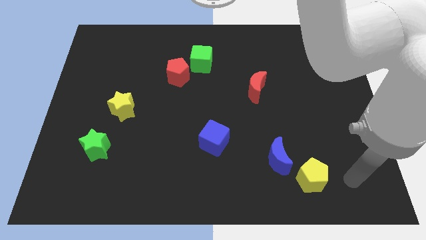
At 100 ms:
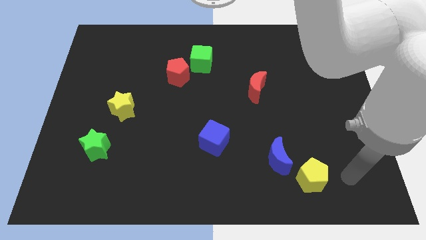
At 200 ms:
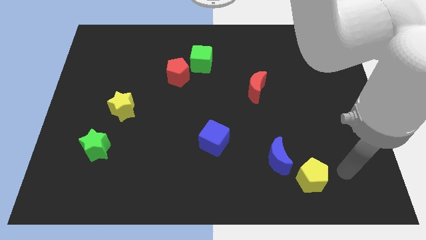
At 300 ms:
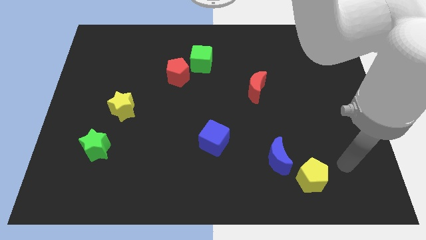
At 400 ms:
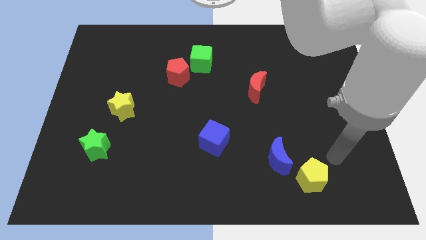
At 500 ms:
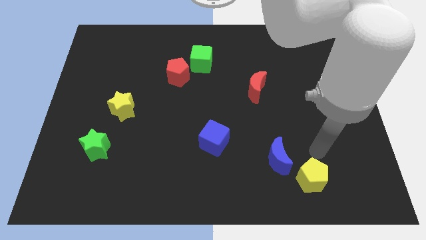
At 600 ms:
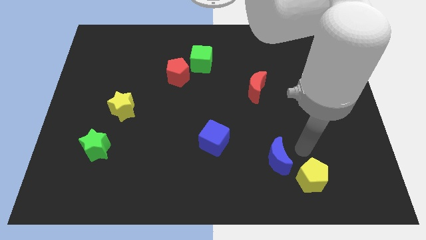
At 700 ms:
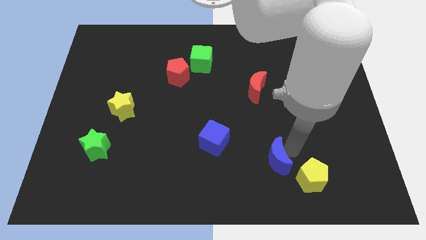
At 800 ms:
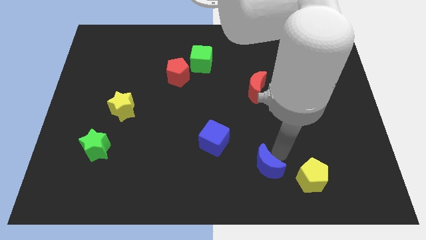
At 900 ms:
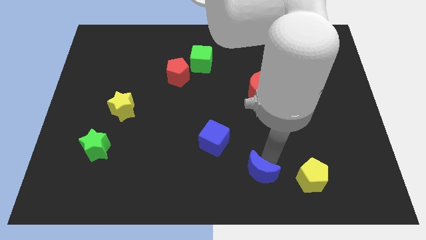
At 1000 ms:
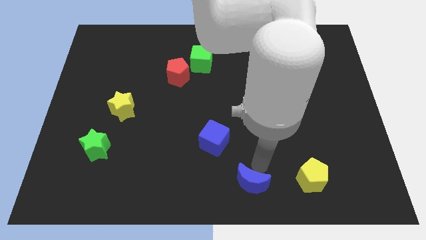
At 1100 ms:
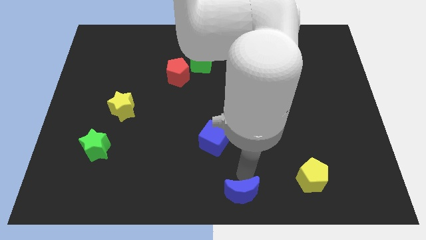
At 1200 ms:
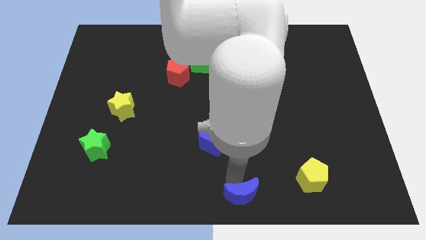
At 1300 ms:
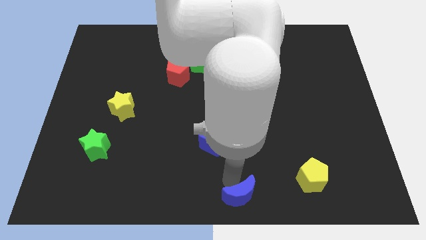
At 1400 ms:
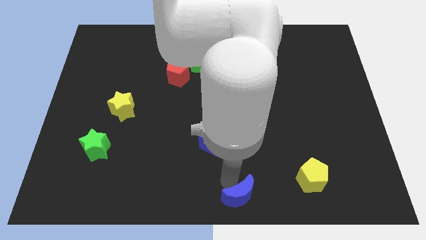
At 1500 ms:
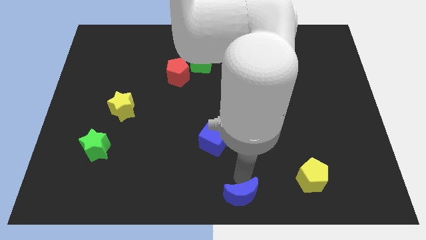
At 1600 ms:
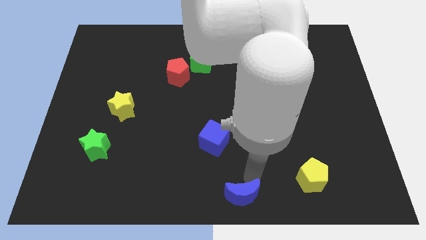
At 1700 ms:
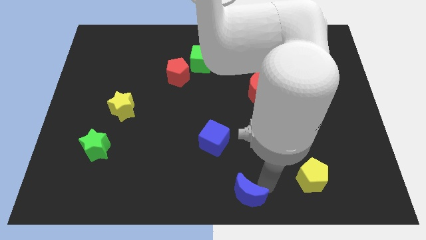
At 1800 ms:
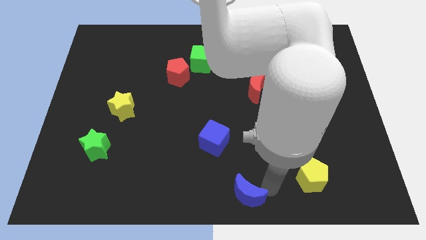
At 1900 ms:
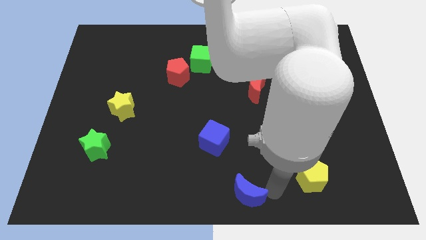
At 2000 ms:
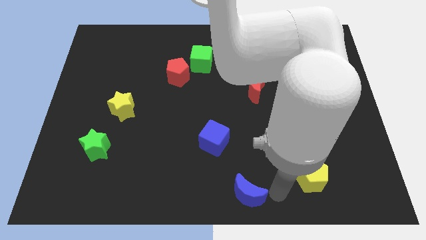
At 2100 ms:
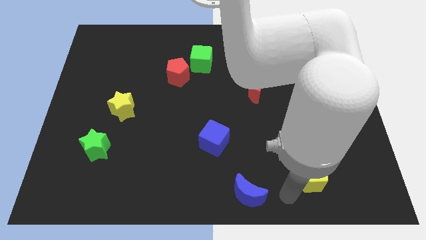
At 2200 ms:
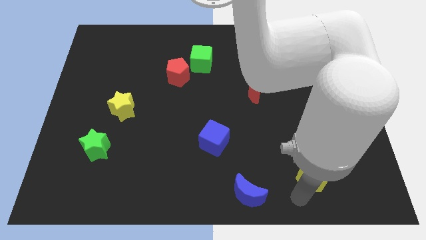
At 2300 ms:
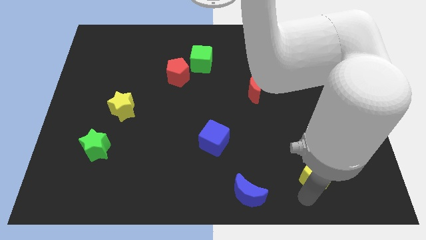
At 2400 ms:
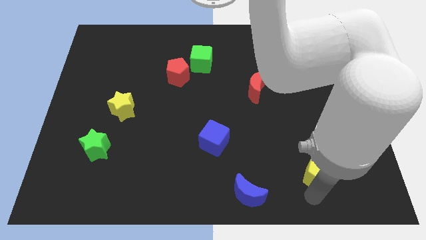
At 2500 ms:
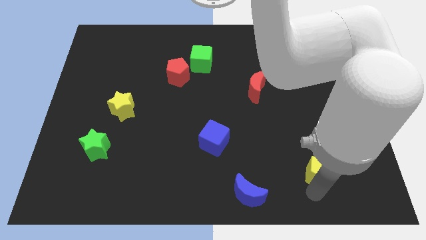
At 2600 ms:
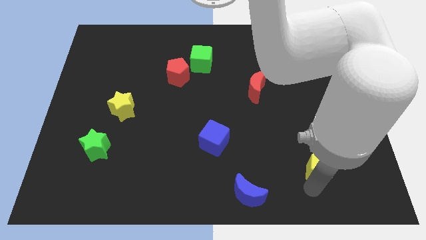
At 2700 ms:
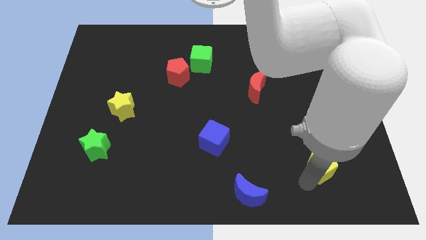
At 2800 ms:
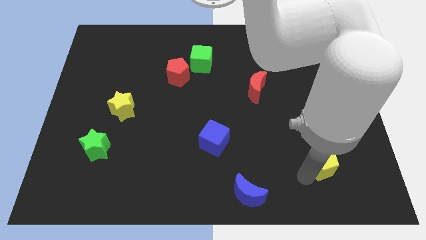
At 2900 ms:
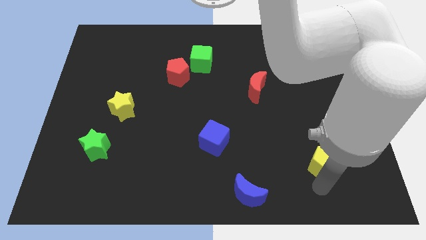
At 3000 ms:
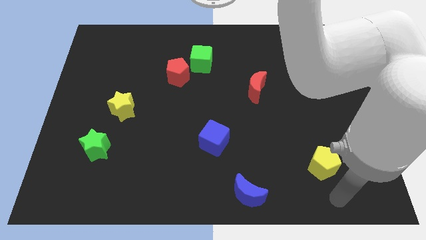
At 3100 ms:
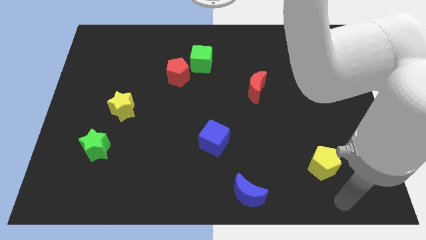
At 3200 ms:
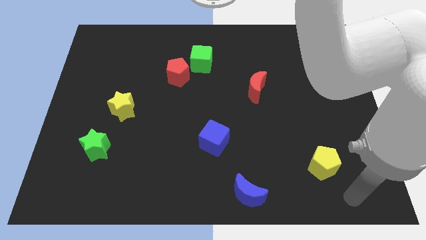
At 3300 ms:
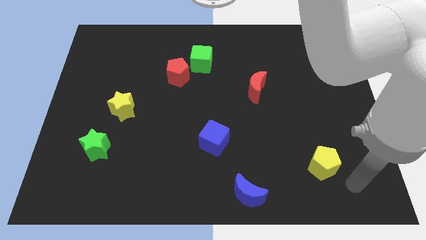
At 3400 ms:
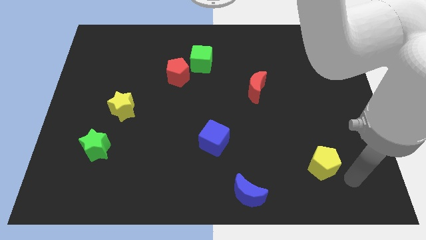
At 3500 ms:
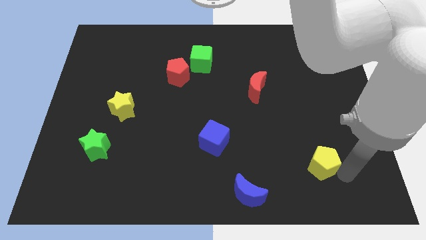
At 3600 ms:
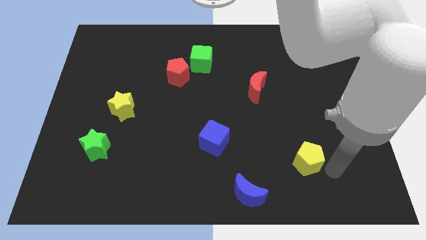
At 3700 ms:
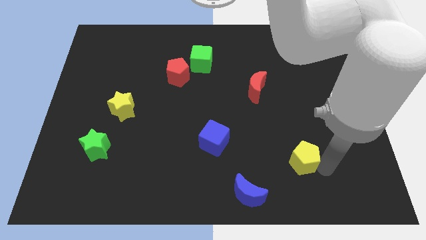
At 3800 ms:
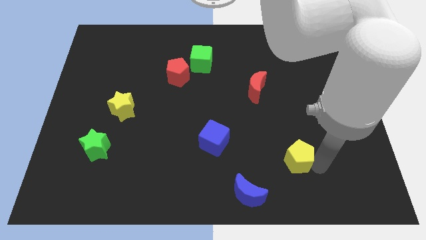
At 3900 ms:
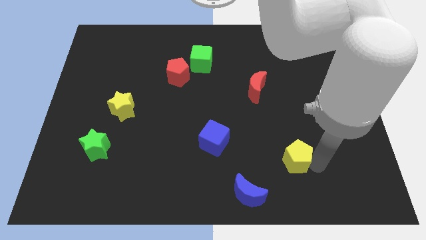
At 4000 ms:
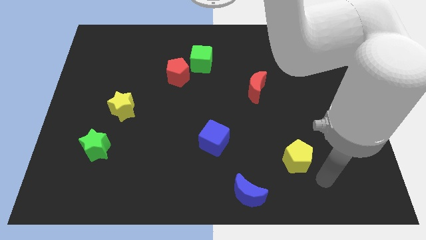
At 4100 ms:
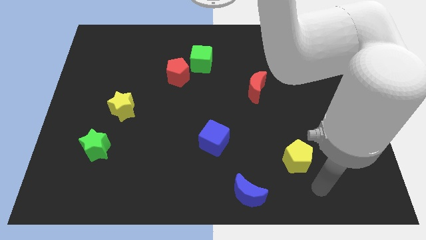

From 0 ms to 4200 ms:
place yellow pentagon to the top right of blue moon

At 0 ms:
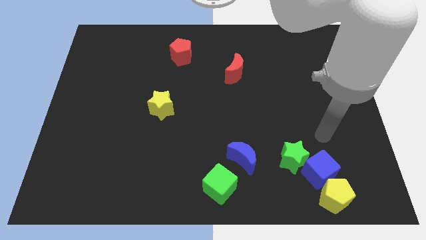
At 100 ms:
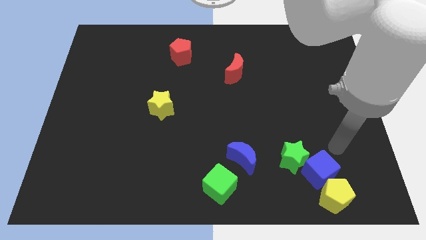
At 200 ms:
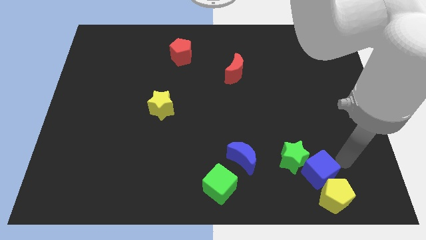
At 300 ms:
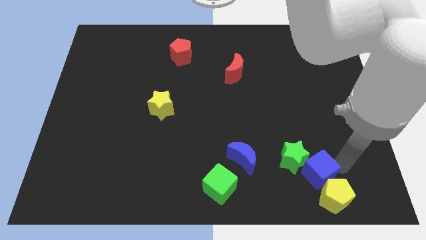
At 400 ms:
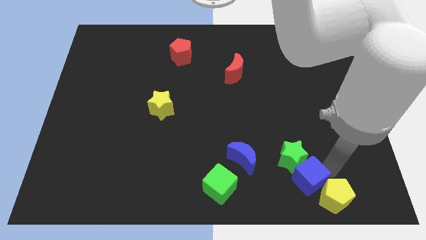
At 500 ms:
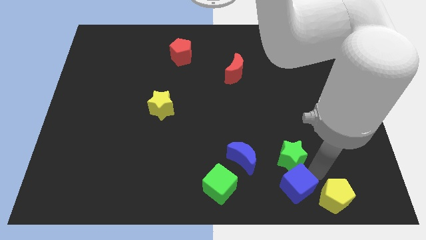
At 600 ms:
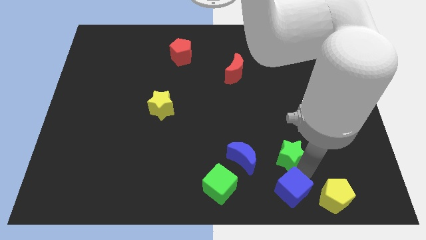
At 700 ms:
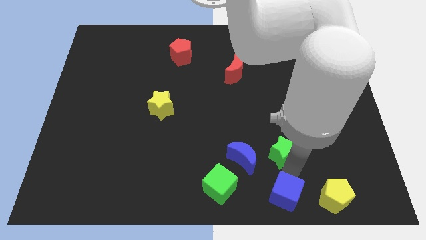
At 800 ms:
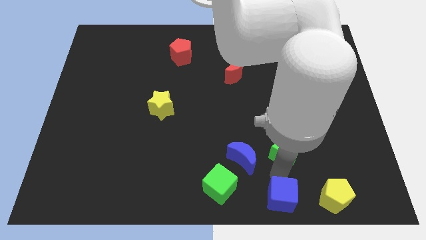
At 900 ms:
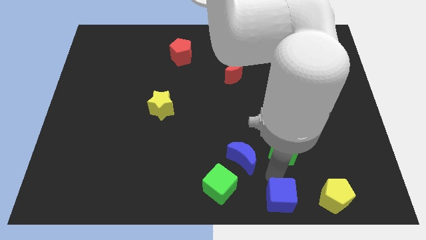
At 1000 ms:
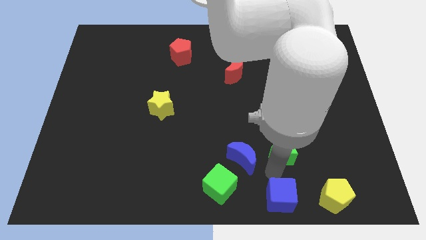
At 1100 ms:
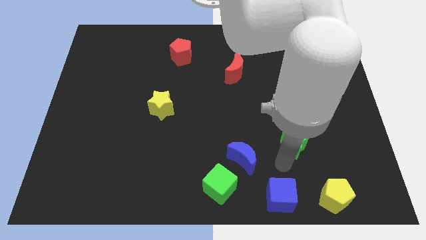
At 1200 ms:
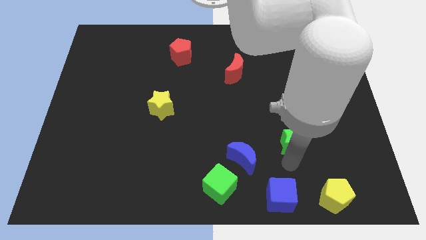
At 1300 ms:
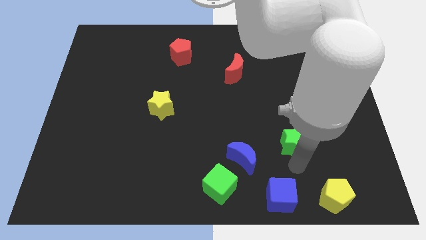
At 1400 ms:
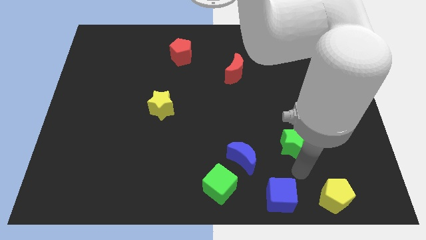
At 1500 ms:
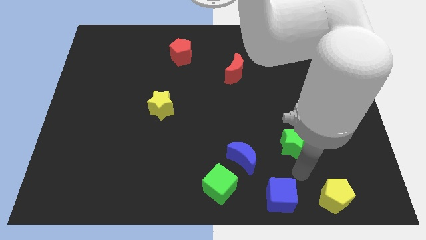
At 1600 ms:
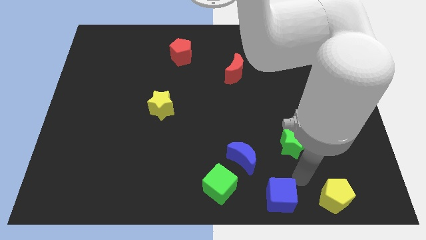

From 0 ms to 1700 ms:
separate green star and blue cube

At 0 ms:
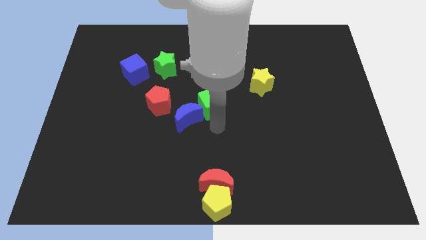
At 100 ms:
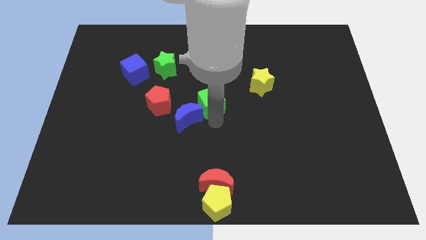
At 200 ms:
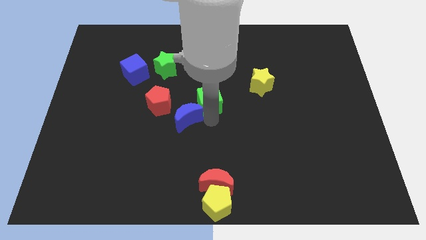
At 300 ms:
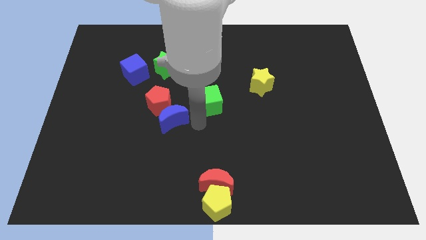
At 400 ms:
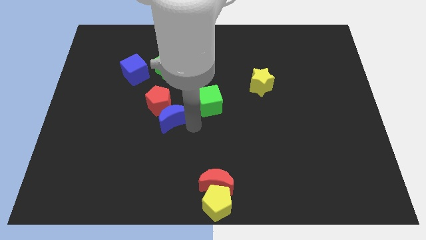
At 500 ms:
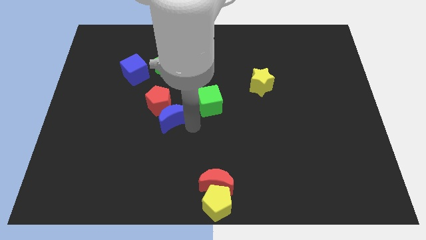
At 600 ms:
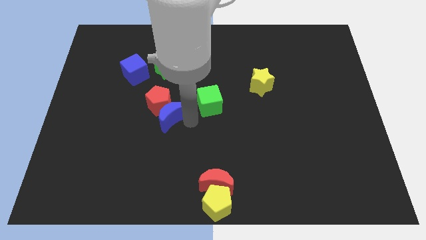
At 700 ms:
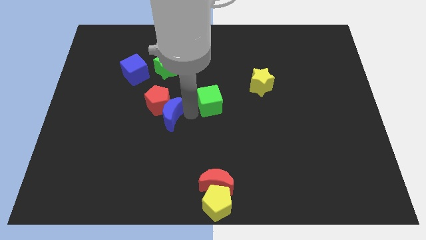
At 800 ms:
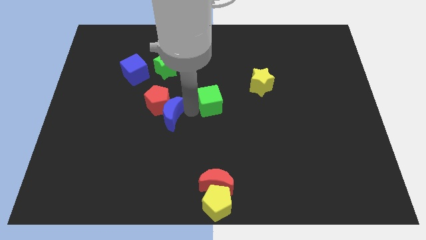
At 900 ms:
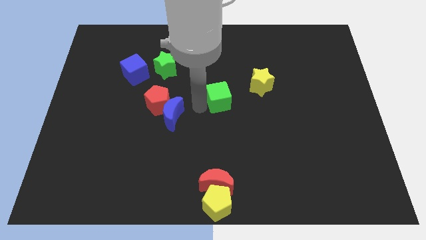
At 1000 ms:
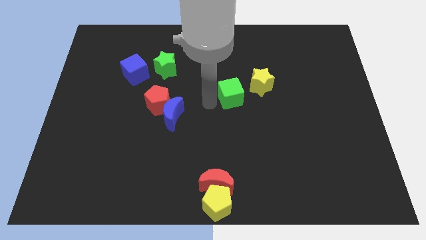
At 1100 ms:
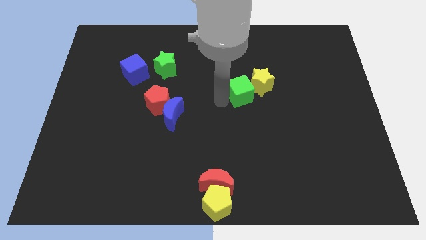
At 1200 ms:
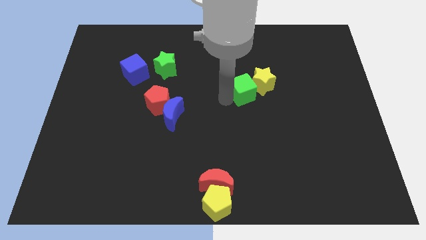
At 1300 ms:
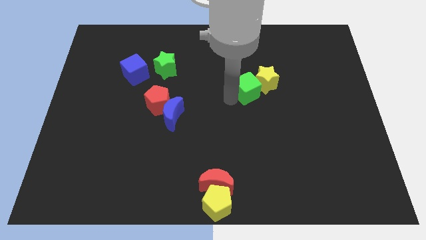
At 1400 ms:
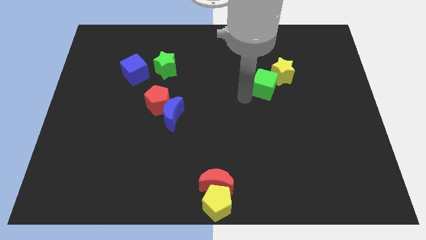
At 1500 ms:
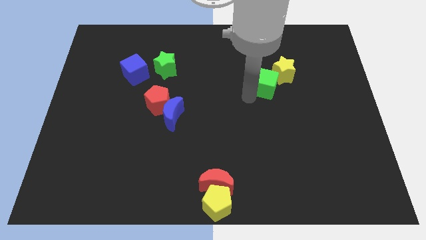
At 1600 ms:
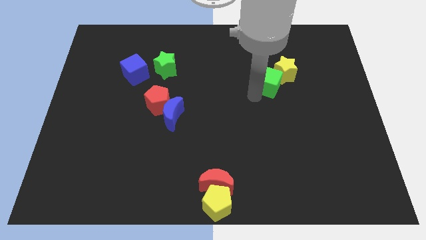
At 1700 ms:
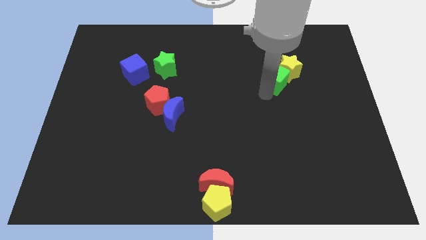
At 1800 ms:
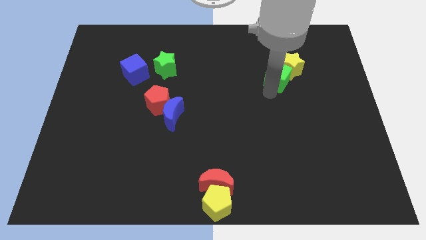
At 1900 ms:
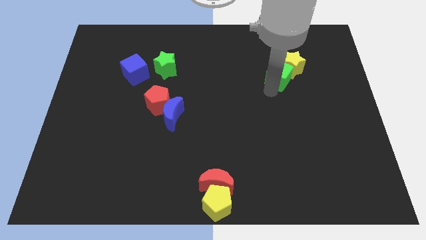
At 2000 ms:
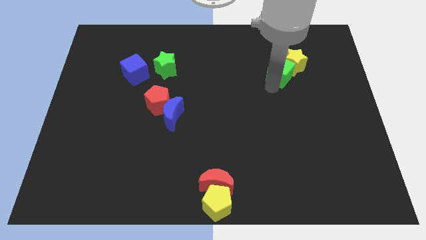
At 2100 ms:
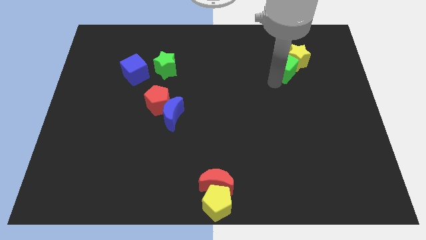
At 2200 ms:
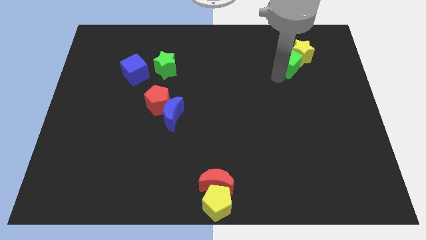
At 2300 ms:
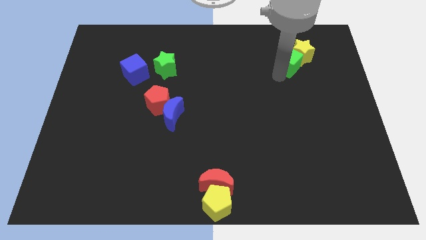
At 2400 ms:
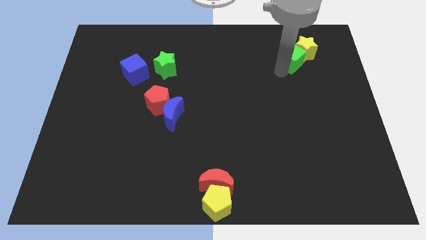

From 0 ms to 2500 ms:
push the yellow star and green cube to top right

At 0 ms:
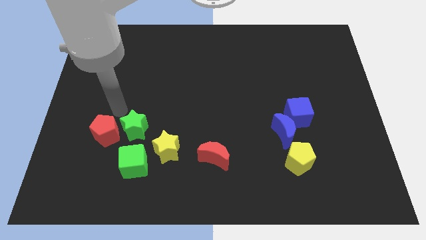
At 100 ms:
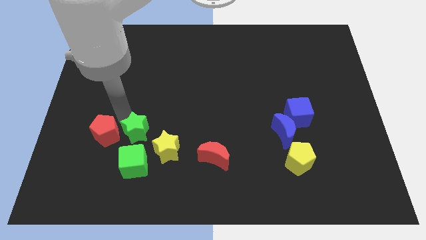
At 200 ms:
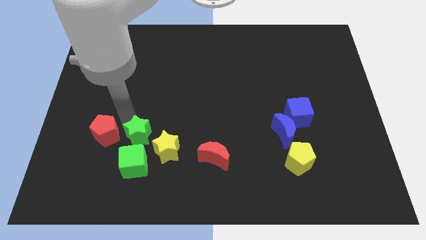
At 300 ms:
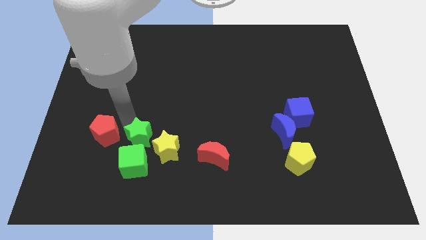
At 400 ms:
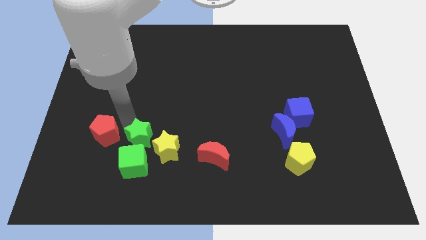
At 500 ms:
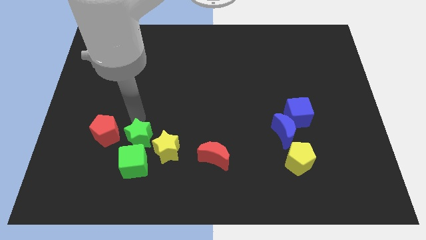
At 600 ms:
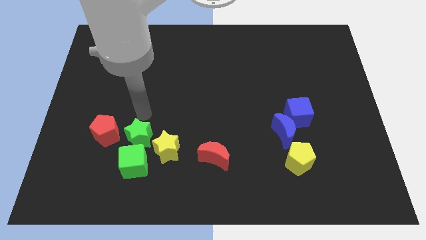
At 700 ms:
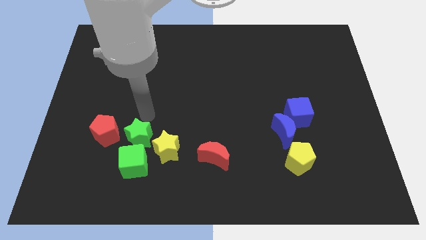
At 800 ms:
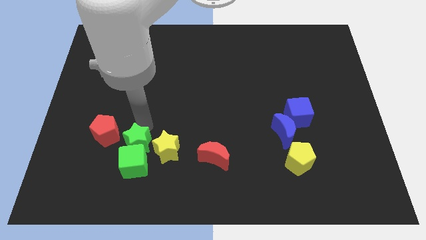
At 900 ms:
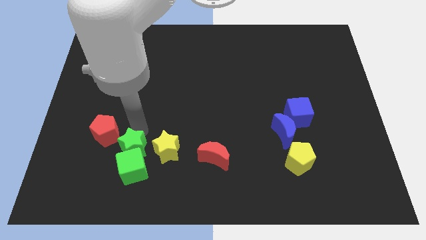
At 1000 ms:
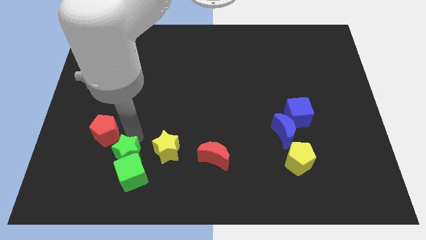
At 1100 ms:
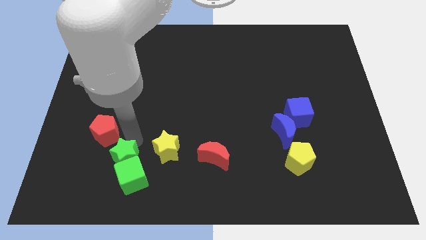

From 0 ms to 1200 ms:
move the green star into the green cube
